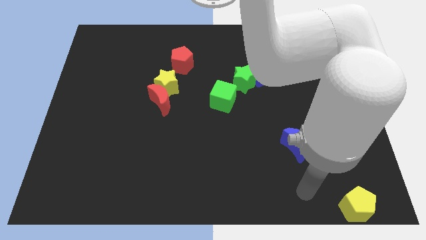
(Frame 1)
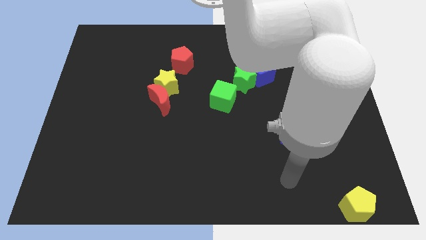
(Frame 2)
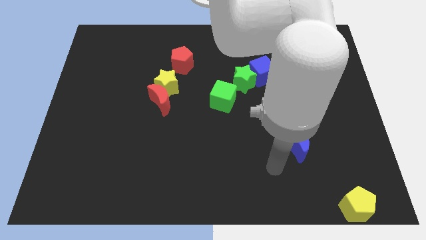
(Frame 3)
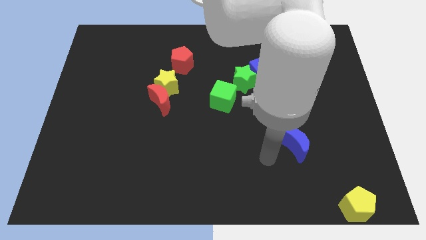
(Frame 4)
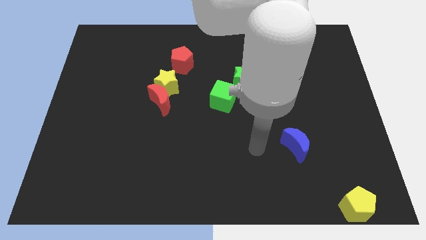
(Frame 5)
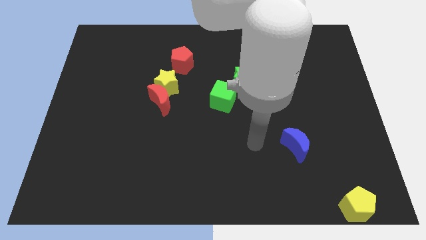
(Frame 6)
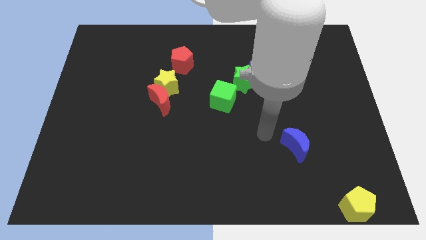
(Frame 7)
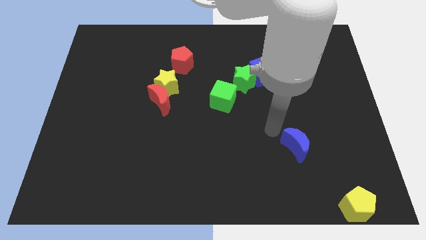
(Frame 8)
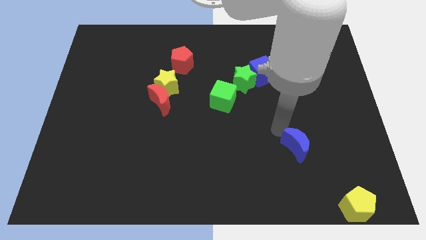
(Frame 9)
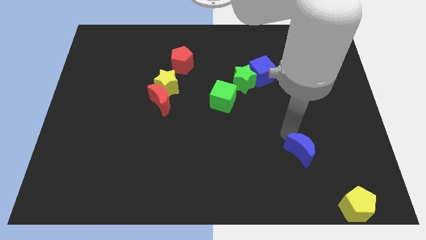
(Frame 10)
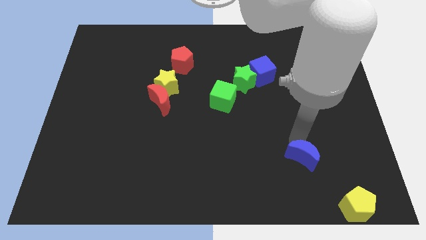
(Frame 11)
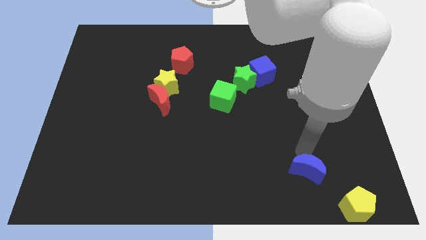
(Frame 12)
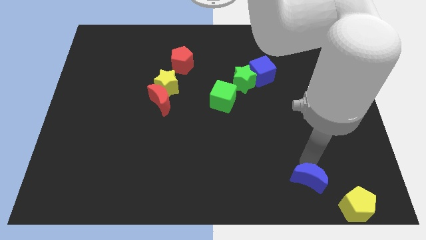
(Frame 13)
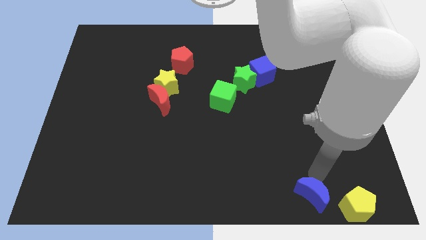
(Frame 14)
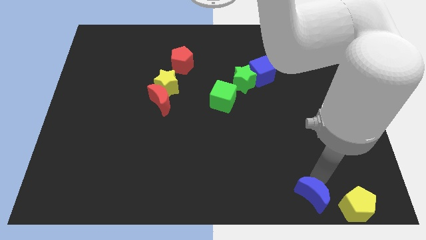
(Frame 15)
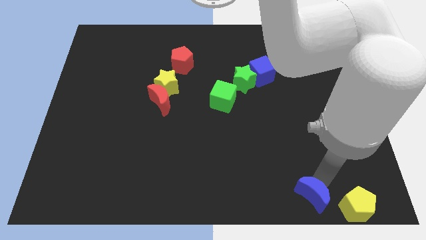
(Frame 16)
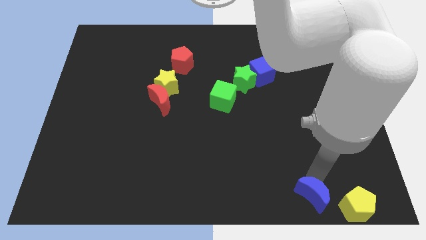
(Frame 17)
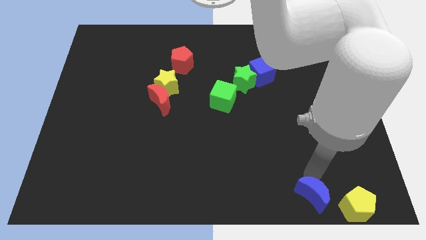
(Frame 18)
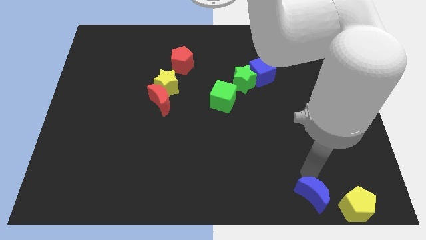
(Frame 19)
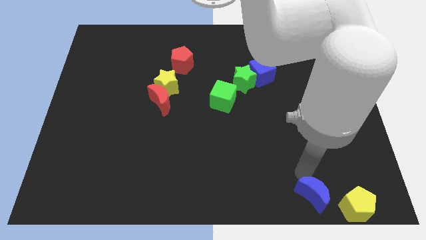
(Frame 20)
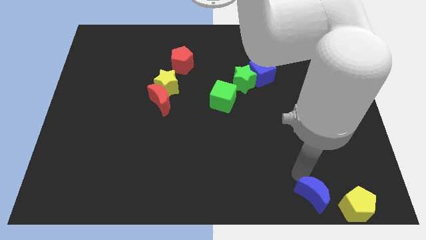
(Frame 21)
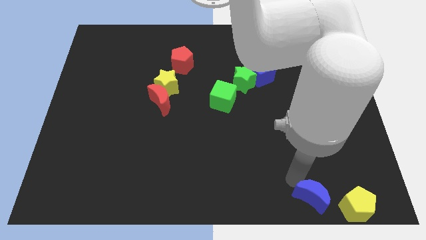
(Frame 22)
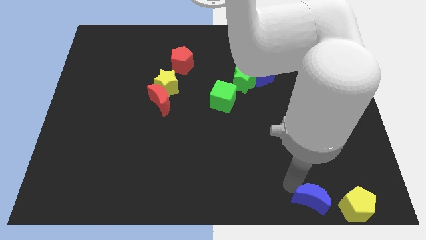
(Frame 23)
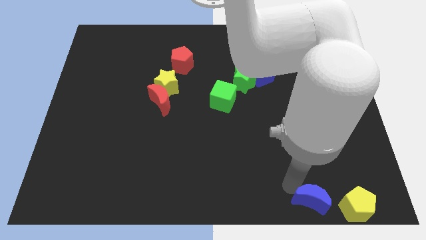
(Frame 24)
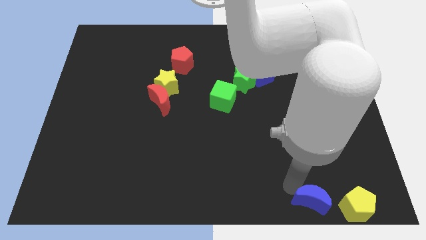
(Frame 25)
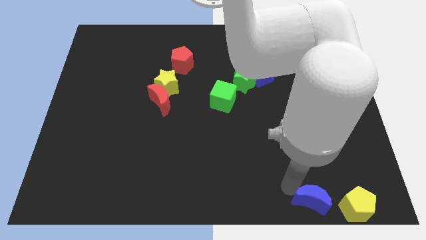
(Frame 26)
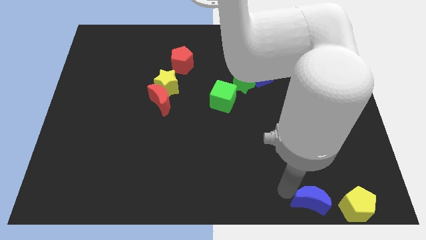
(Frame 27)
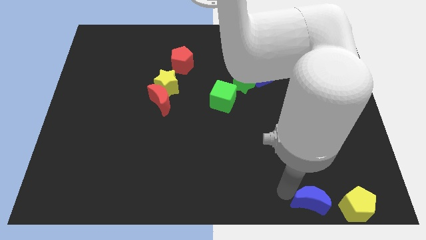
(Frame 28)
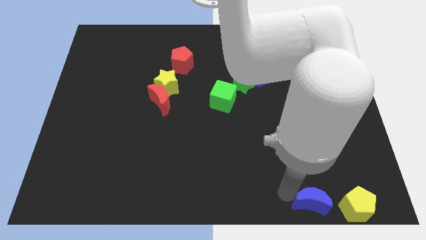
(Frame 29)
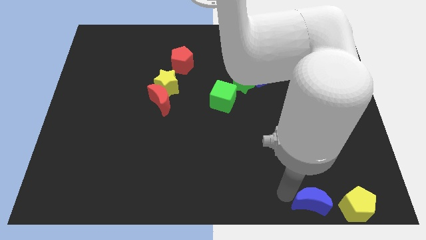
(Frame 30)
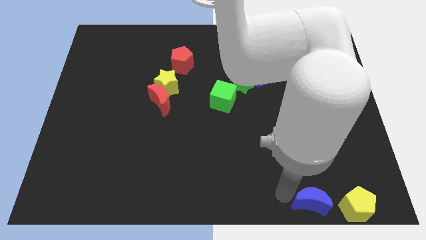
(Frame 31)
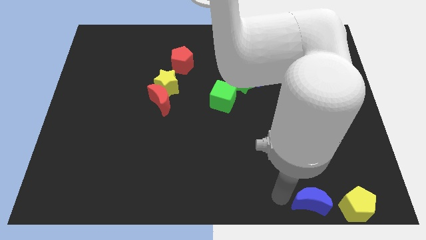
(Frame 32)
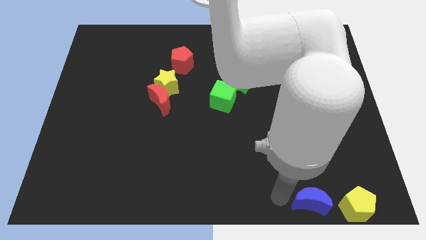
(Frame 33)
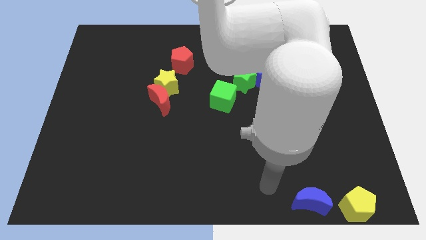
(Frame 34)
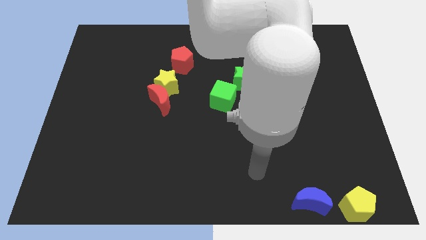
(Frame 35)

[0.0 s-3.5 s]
push the blue moon to the left side of the yellow pentagon

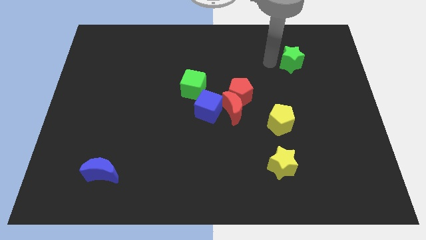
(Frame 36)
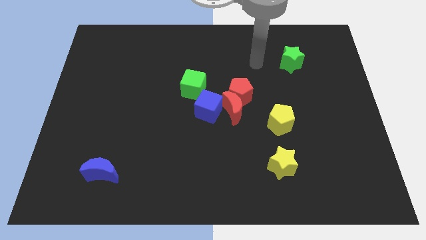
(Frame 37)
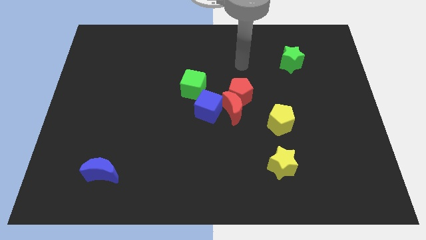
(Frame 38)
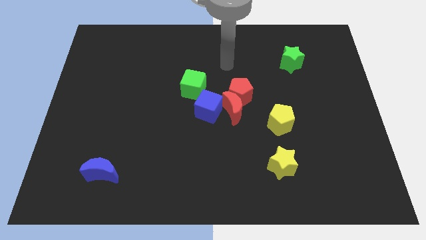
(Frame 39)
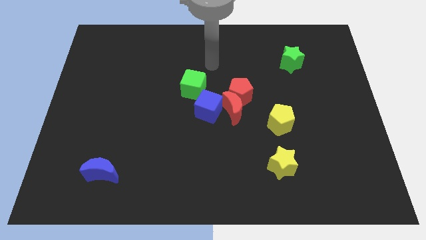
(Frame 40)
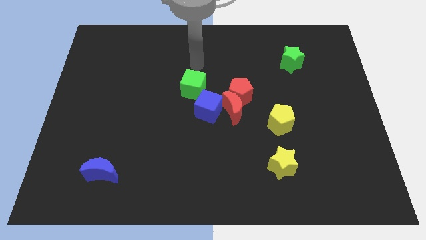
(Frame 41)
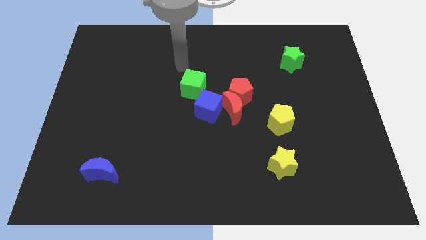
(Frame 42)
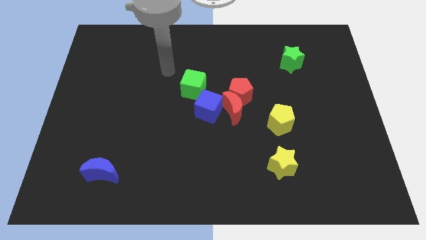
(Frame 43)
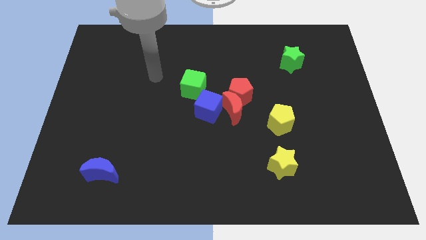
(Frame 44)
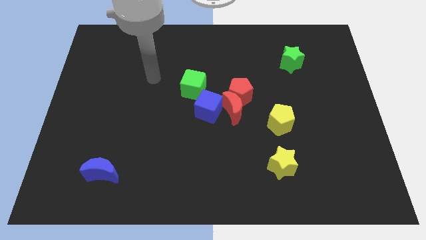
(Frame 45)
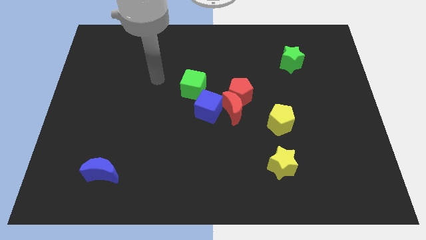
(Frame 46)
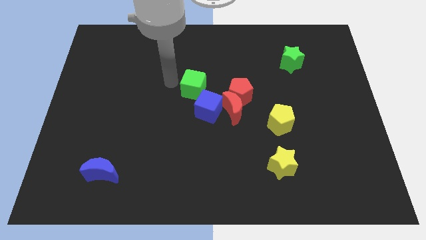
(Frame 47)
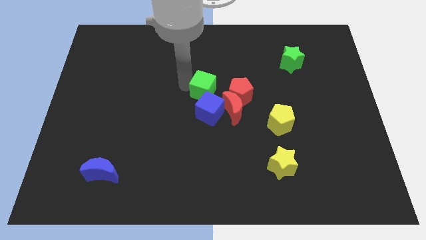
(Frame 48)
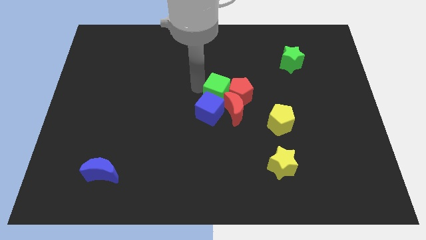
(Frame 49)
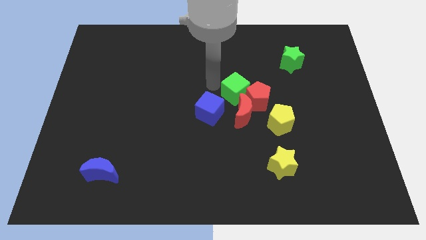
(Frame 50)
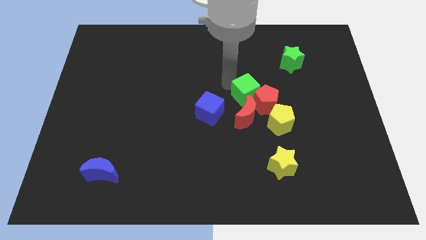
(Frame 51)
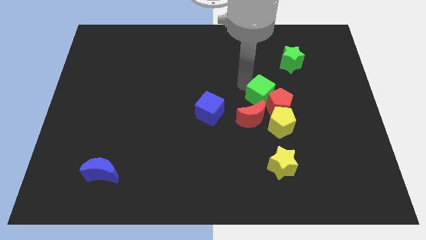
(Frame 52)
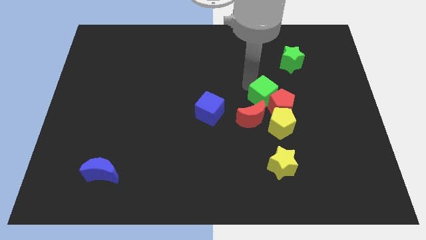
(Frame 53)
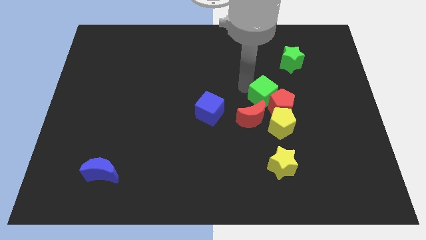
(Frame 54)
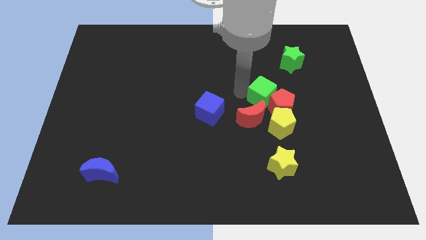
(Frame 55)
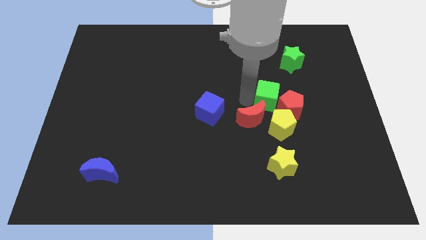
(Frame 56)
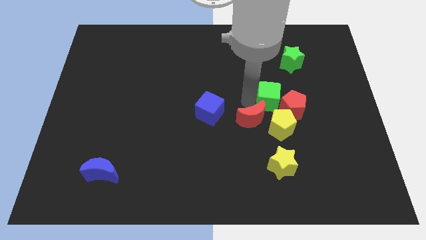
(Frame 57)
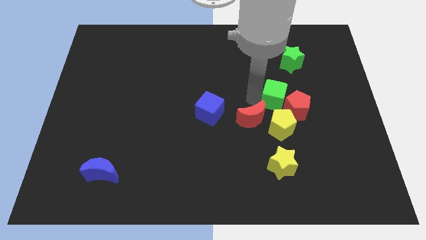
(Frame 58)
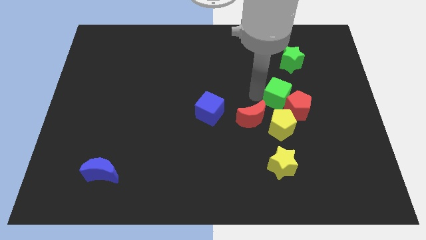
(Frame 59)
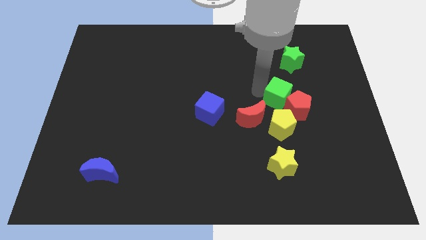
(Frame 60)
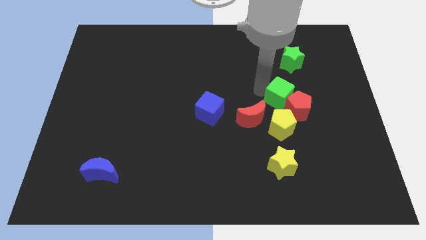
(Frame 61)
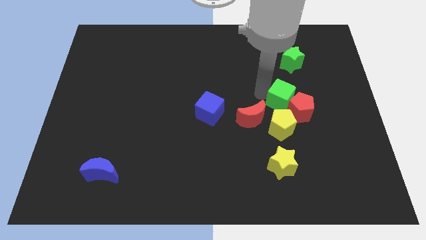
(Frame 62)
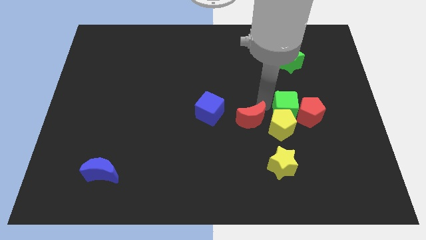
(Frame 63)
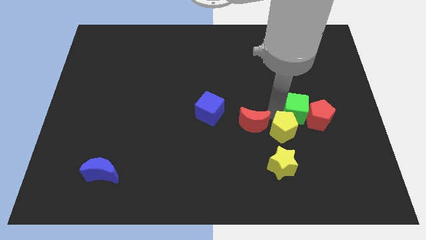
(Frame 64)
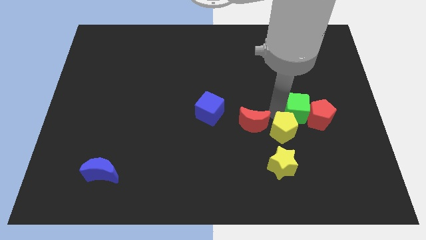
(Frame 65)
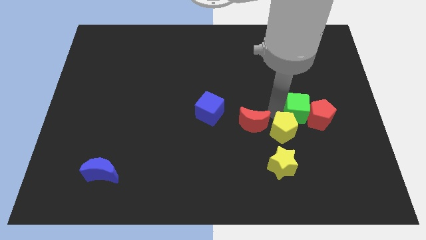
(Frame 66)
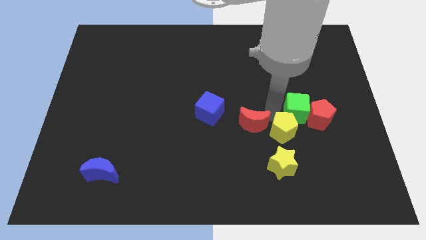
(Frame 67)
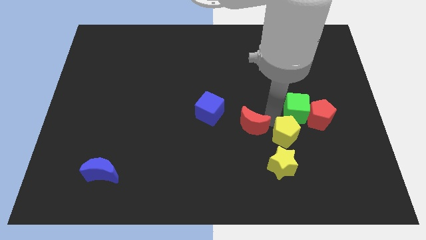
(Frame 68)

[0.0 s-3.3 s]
push the green cube into the red pentagon

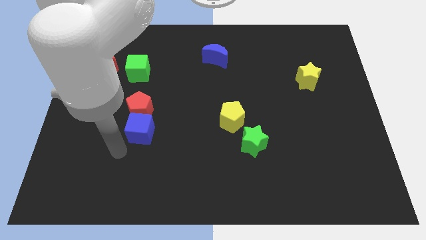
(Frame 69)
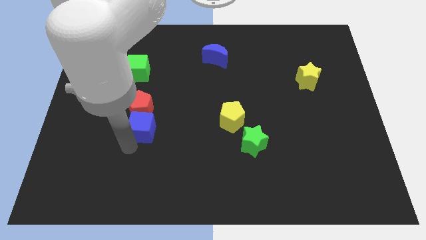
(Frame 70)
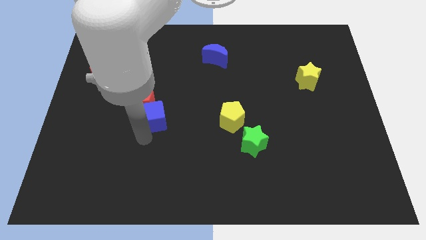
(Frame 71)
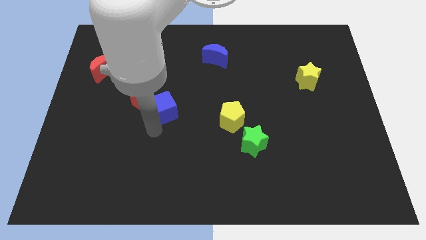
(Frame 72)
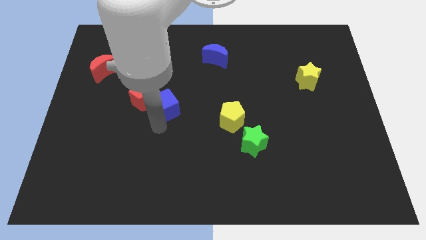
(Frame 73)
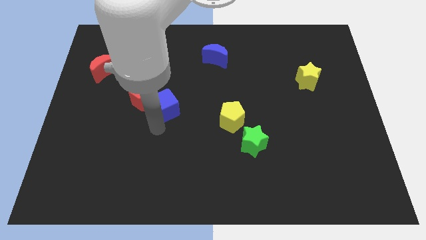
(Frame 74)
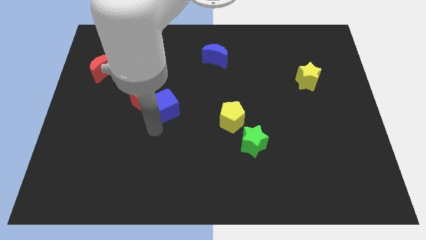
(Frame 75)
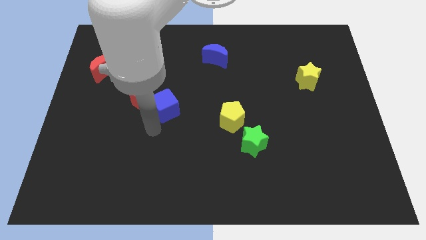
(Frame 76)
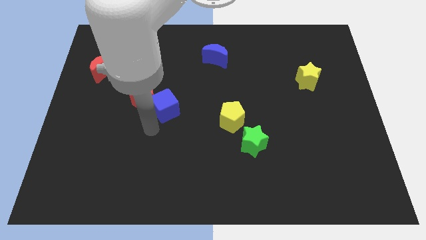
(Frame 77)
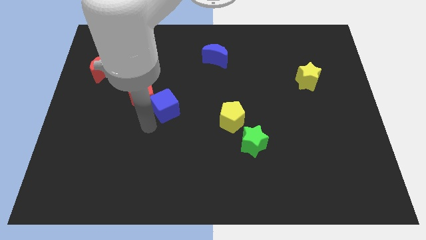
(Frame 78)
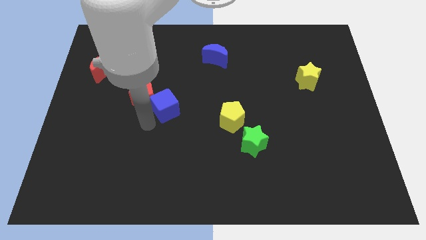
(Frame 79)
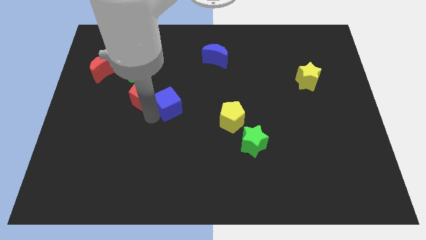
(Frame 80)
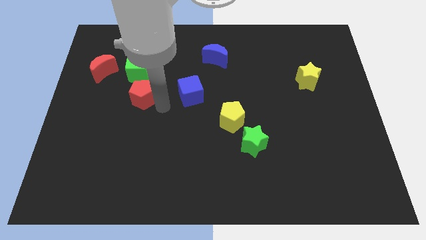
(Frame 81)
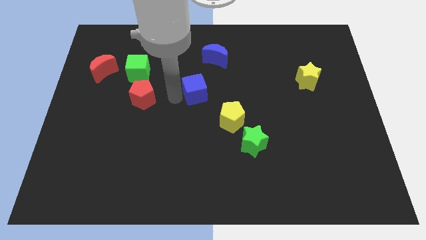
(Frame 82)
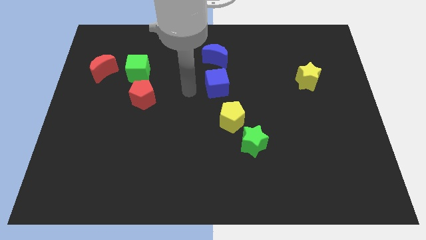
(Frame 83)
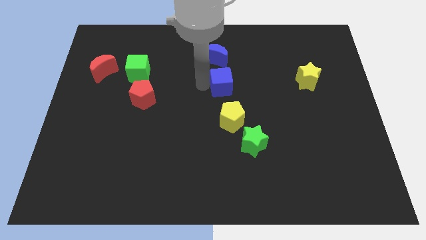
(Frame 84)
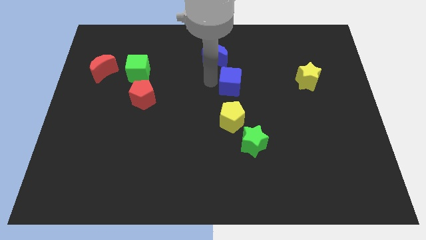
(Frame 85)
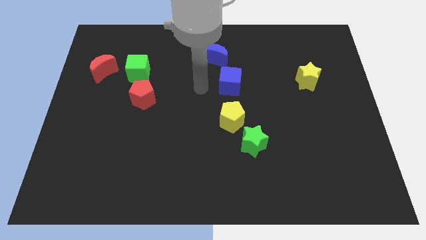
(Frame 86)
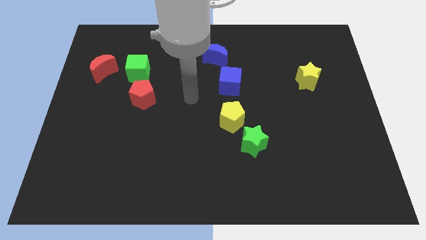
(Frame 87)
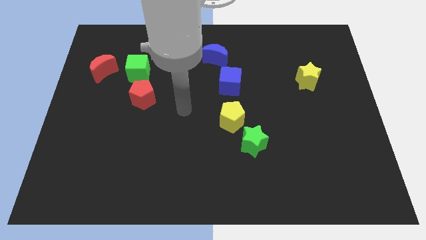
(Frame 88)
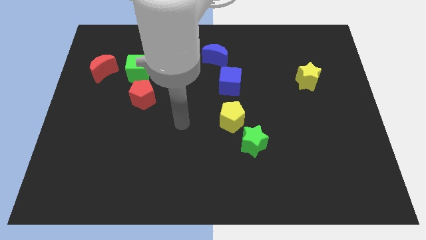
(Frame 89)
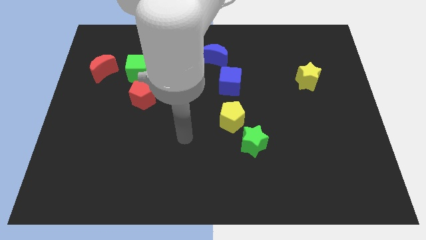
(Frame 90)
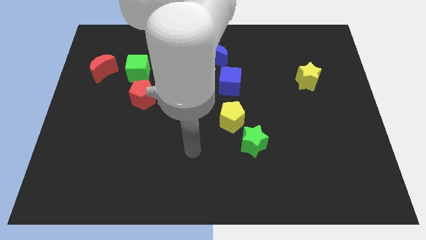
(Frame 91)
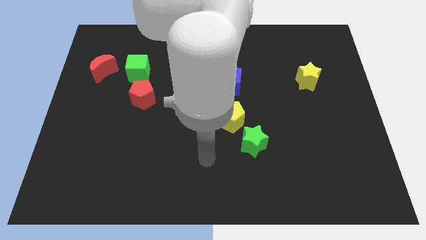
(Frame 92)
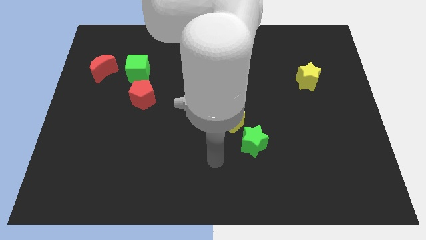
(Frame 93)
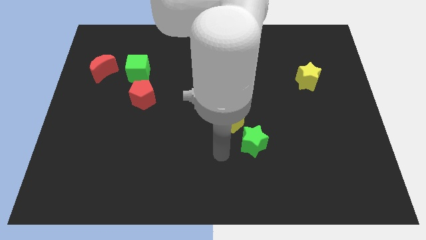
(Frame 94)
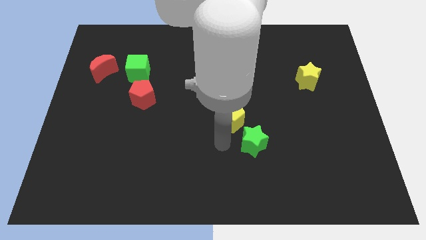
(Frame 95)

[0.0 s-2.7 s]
push the blue cube below the blue crescent
